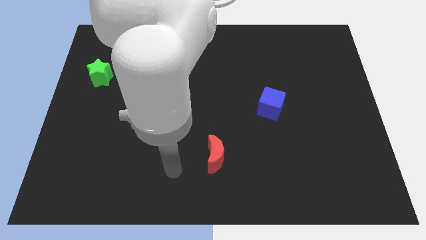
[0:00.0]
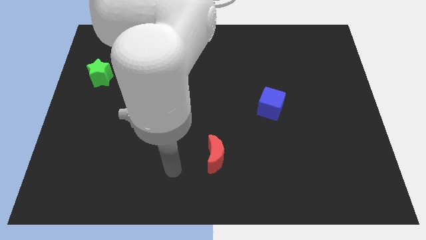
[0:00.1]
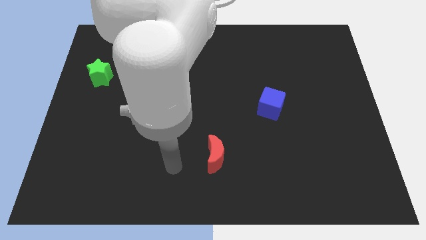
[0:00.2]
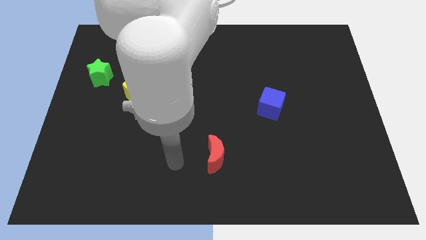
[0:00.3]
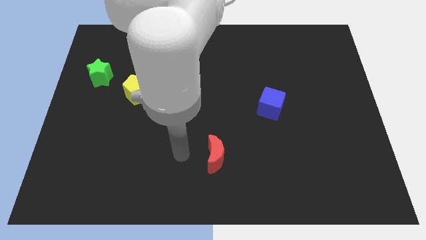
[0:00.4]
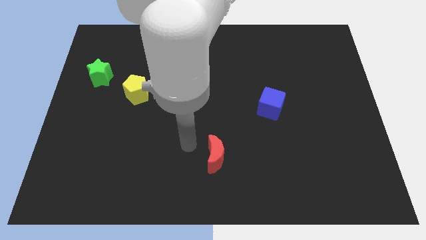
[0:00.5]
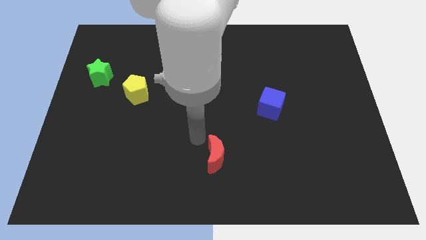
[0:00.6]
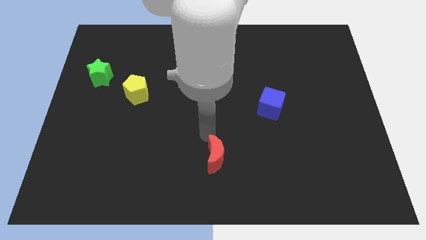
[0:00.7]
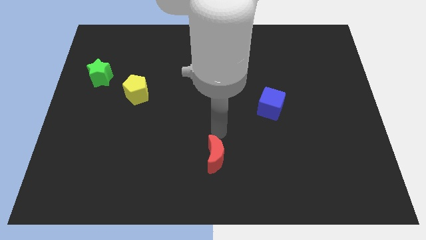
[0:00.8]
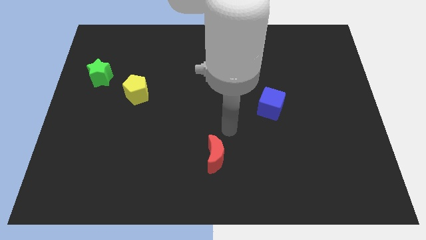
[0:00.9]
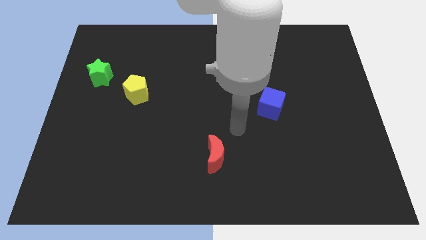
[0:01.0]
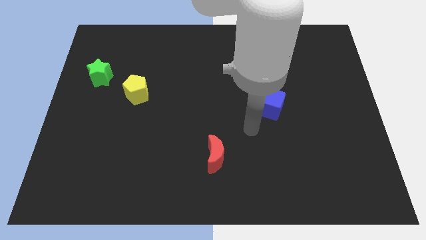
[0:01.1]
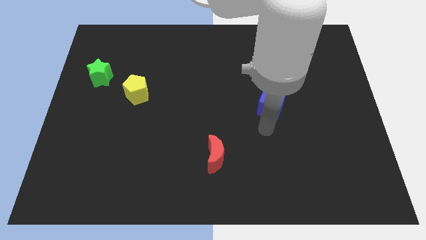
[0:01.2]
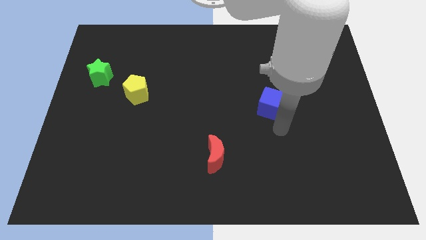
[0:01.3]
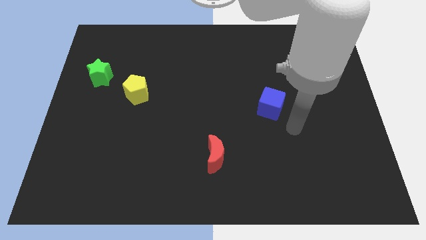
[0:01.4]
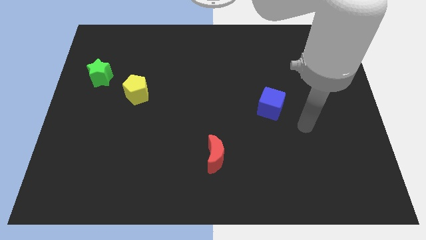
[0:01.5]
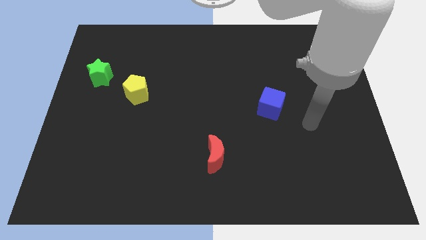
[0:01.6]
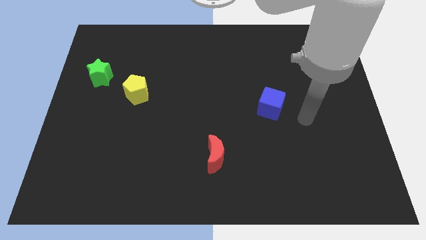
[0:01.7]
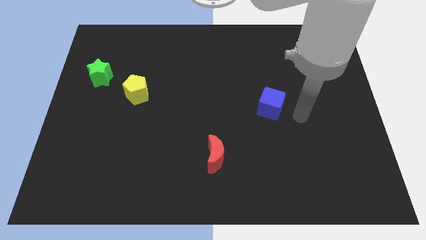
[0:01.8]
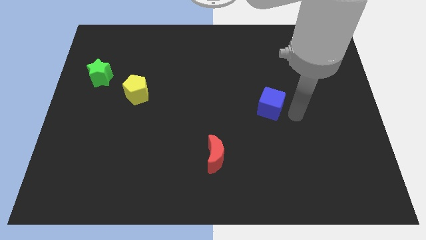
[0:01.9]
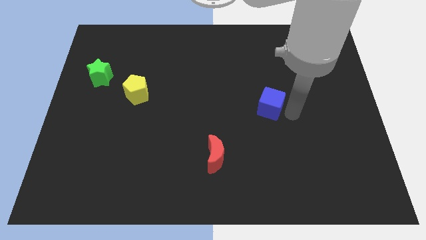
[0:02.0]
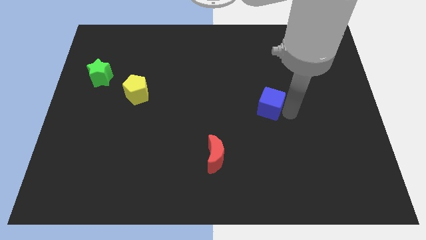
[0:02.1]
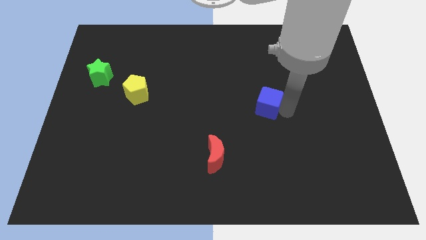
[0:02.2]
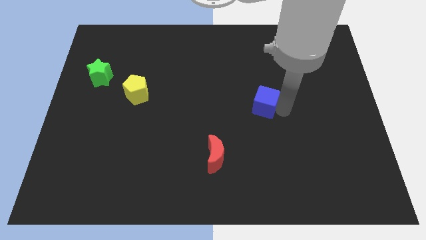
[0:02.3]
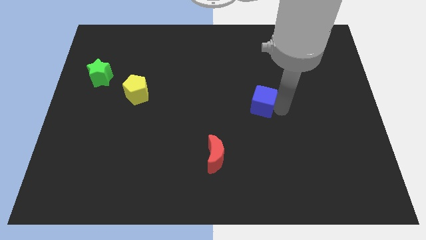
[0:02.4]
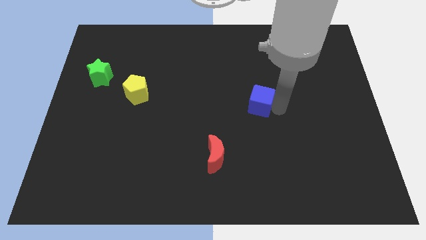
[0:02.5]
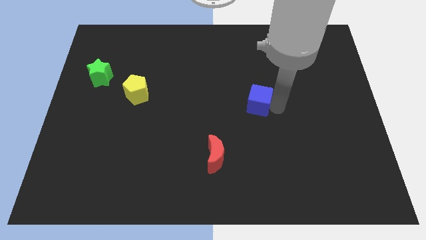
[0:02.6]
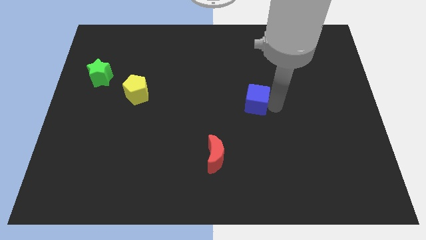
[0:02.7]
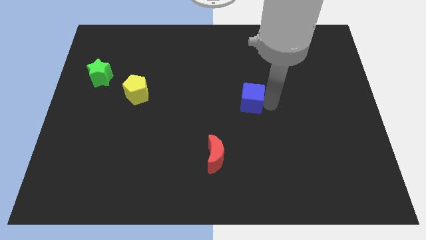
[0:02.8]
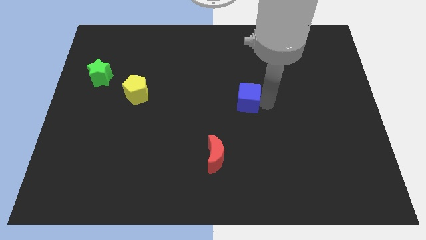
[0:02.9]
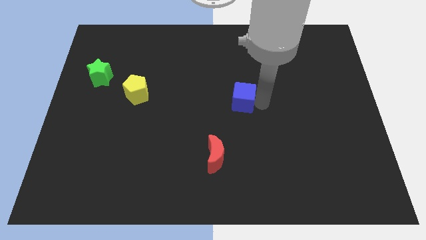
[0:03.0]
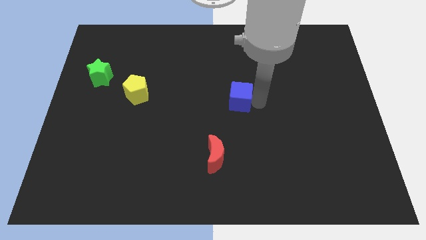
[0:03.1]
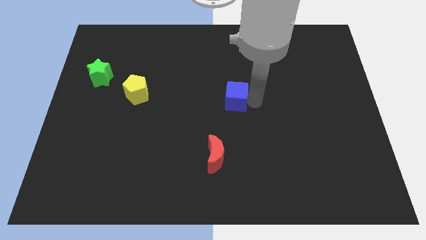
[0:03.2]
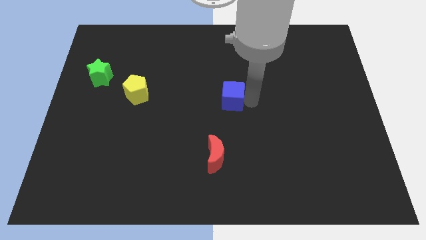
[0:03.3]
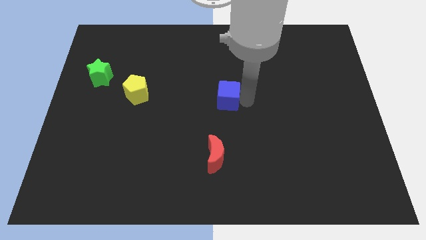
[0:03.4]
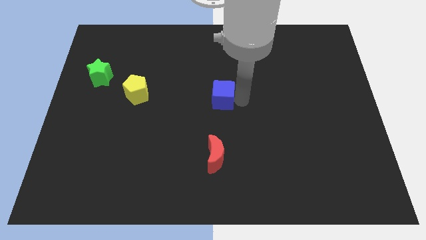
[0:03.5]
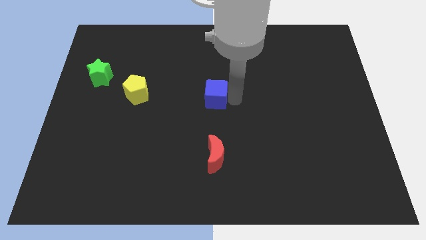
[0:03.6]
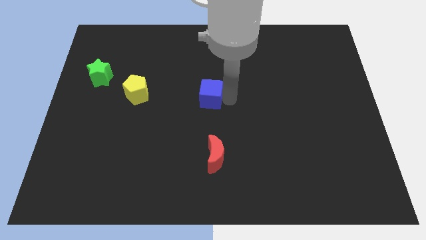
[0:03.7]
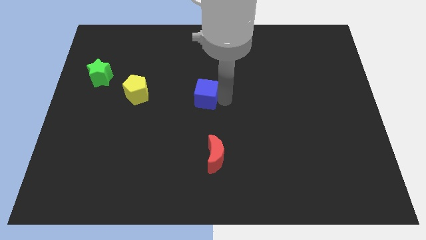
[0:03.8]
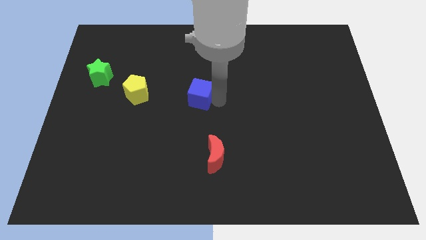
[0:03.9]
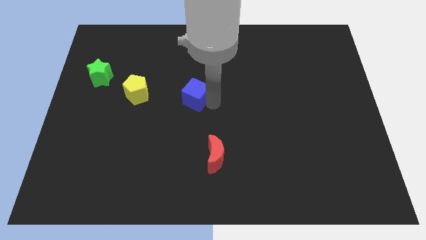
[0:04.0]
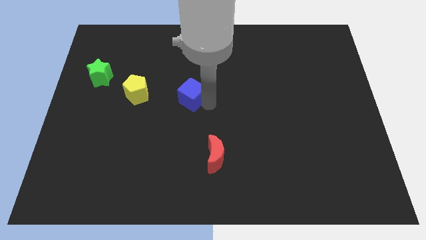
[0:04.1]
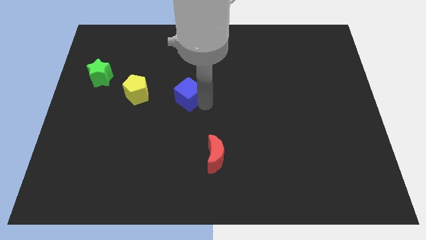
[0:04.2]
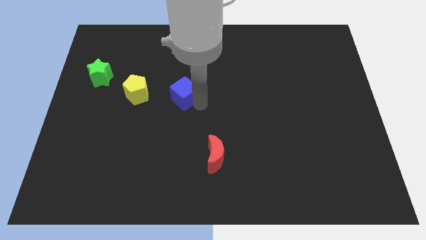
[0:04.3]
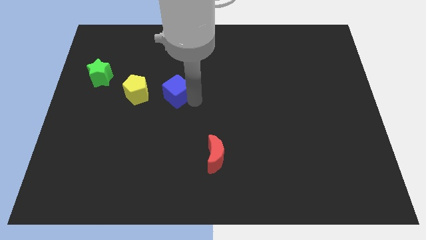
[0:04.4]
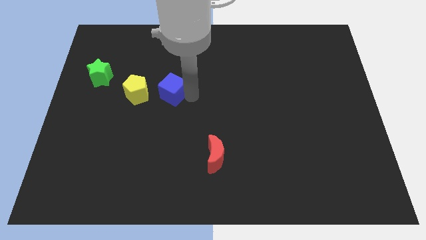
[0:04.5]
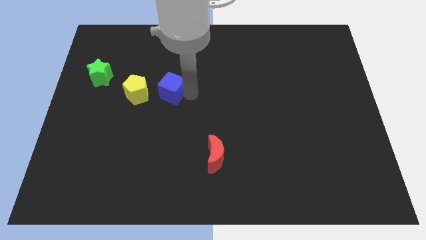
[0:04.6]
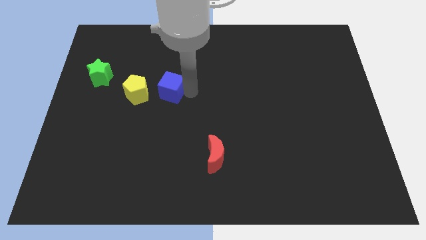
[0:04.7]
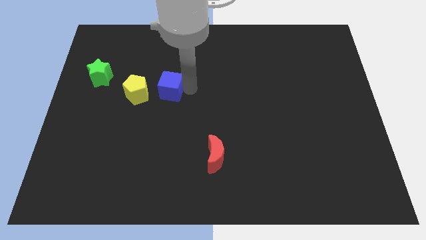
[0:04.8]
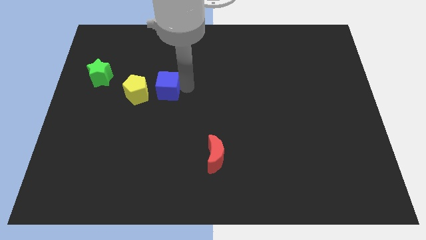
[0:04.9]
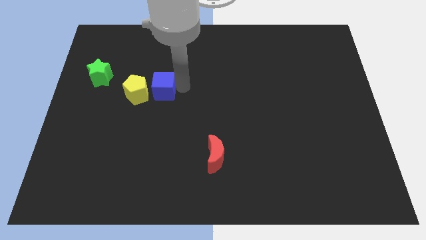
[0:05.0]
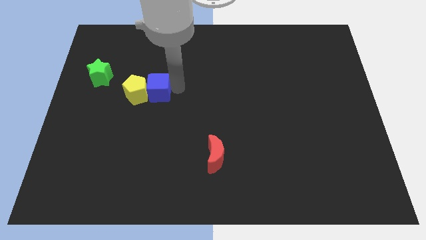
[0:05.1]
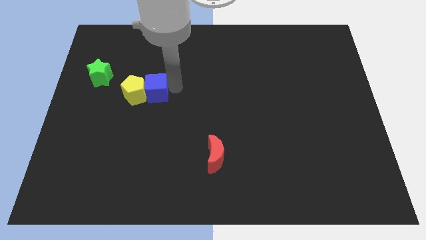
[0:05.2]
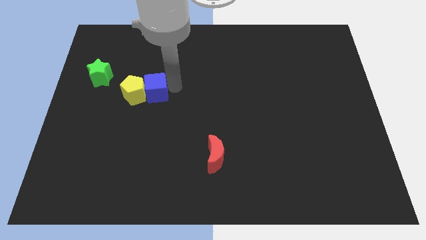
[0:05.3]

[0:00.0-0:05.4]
move the cube next to the pentagon

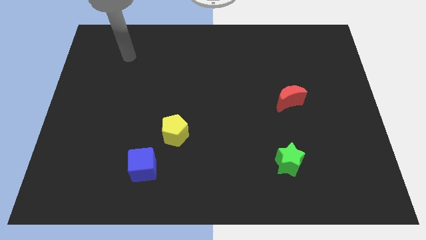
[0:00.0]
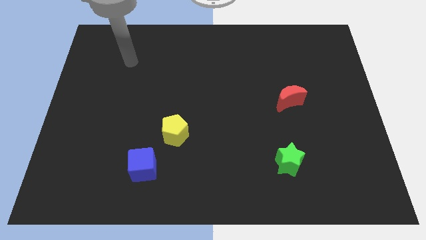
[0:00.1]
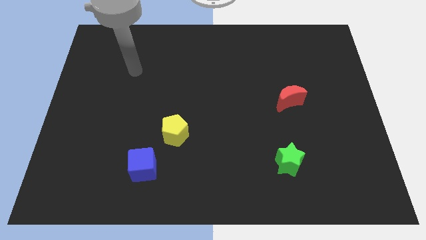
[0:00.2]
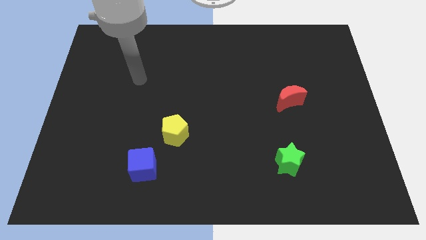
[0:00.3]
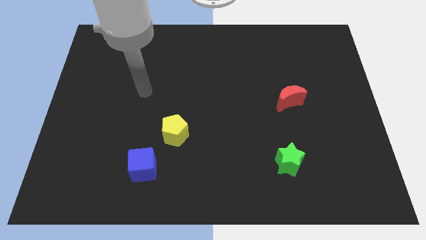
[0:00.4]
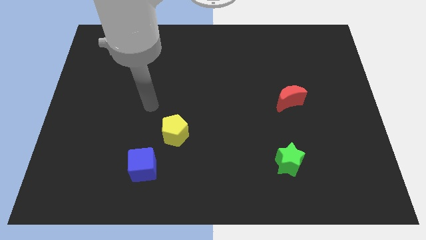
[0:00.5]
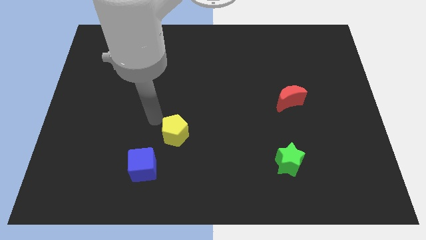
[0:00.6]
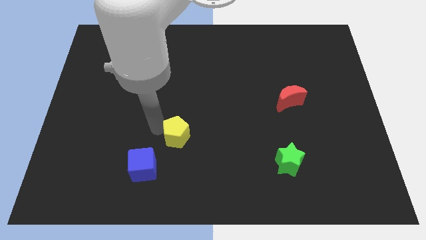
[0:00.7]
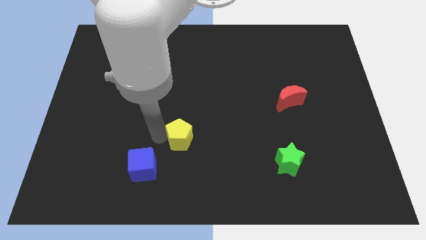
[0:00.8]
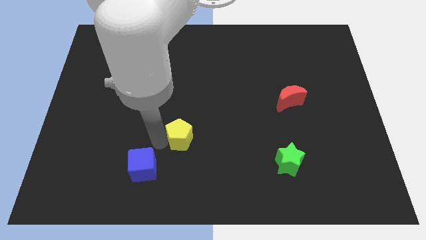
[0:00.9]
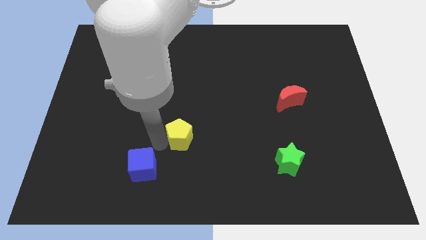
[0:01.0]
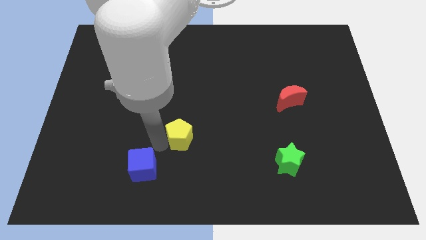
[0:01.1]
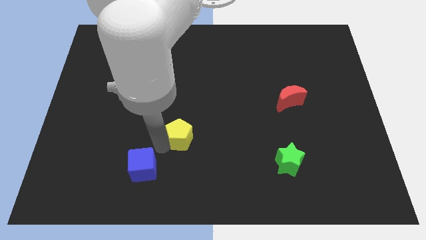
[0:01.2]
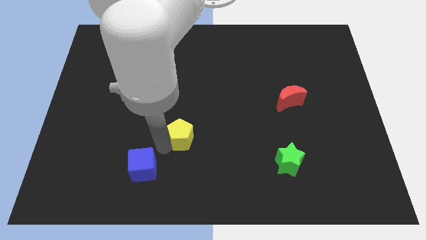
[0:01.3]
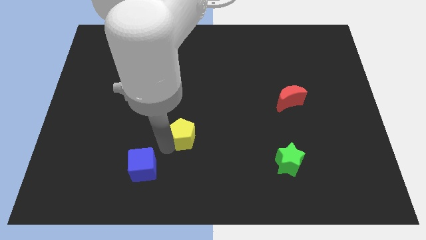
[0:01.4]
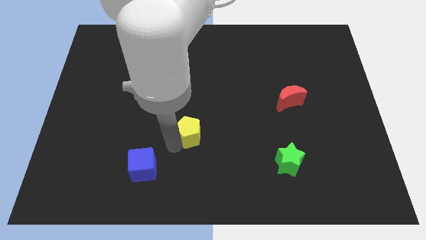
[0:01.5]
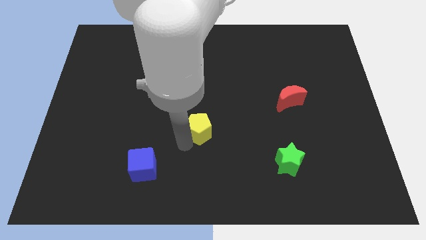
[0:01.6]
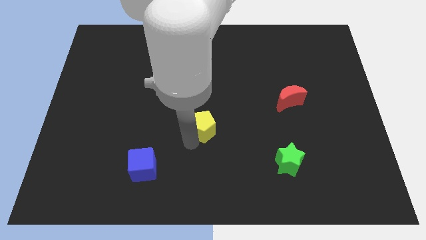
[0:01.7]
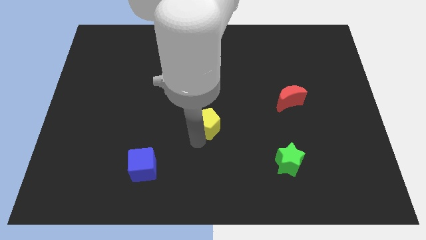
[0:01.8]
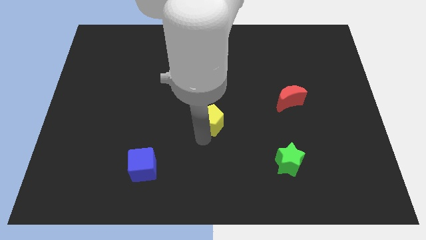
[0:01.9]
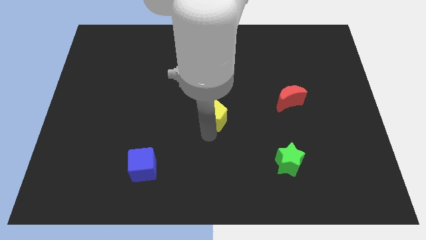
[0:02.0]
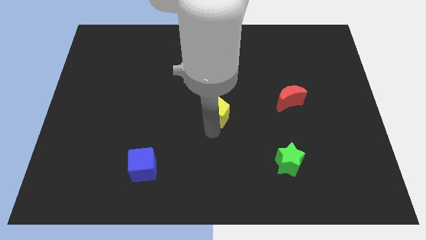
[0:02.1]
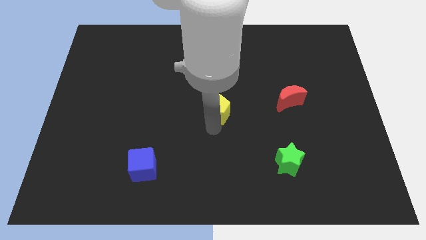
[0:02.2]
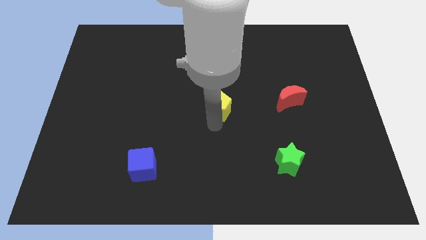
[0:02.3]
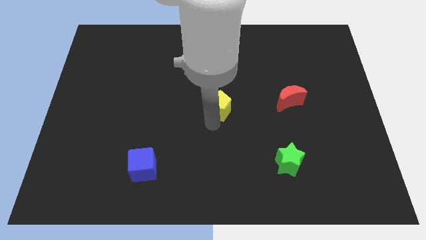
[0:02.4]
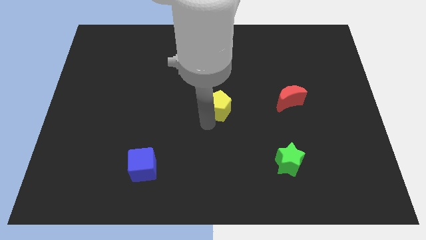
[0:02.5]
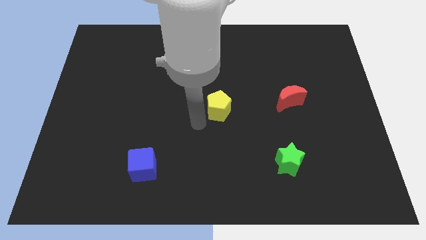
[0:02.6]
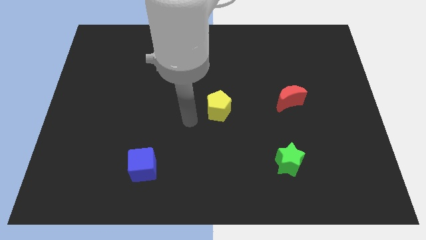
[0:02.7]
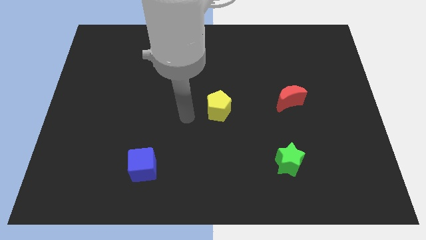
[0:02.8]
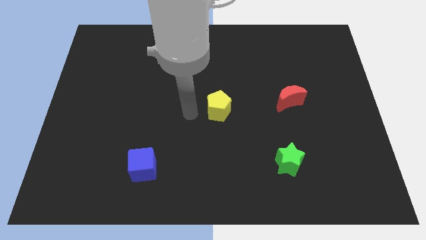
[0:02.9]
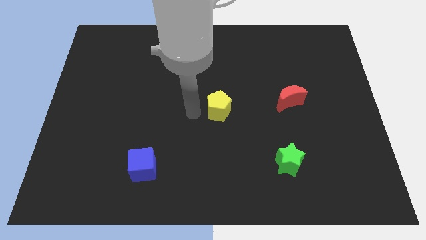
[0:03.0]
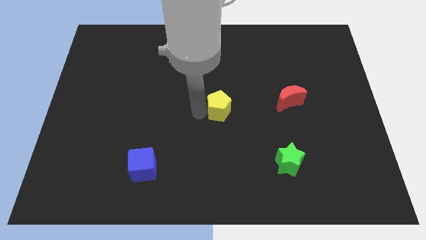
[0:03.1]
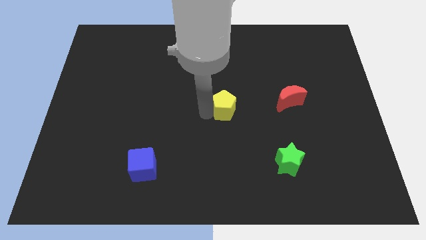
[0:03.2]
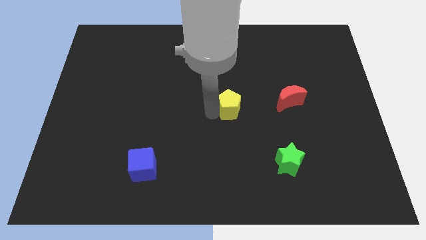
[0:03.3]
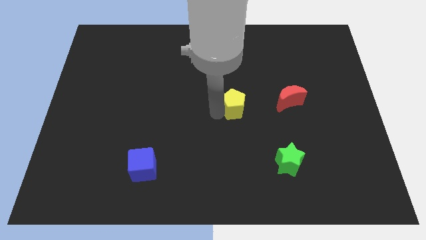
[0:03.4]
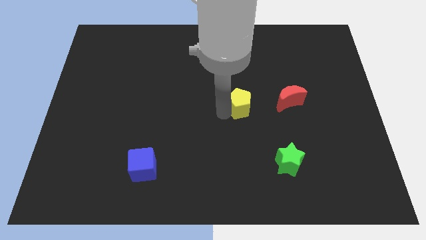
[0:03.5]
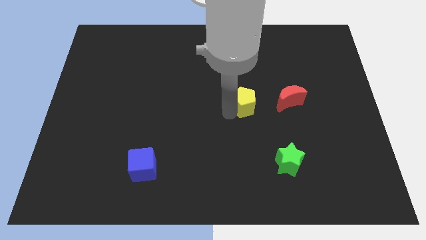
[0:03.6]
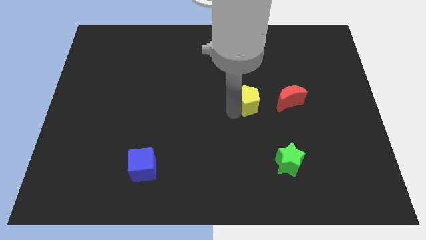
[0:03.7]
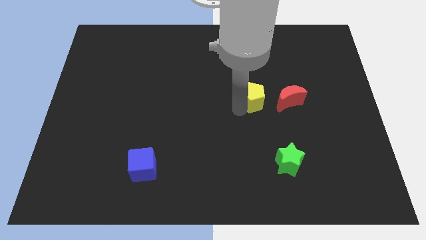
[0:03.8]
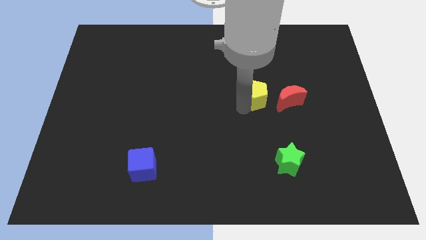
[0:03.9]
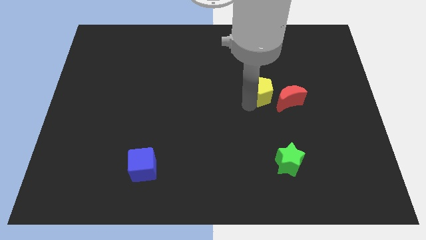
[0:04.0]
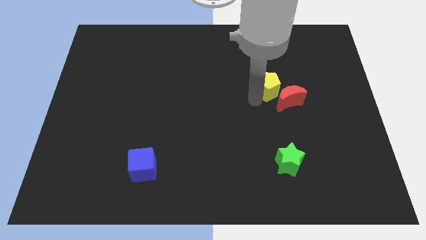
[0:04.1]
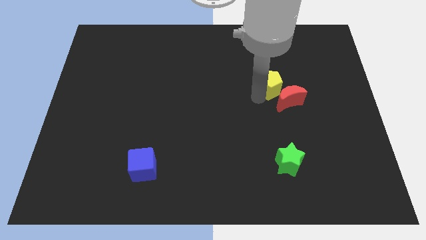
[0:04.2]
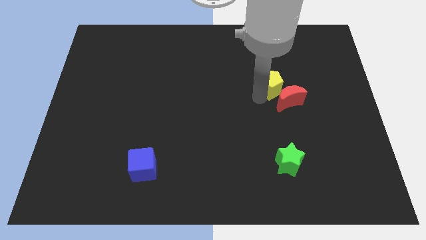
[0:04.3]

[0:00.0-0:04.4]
push the pentagon to the red block
